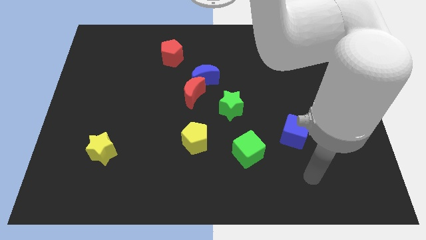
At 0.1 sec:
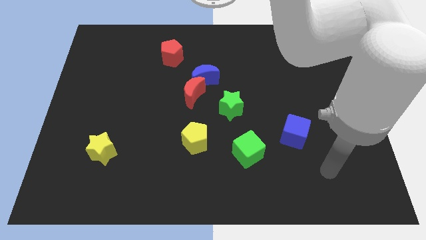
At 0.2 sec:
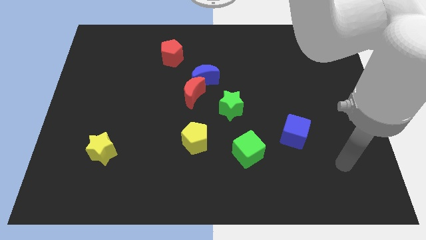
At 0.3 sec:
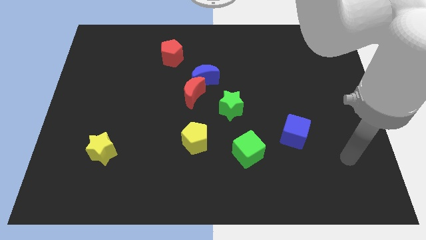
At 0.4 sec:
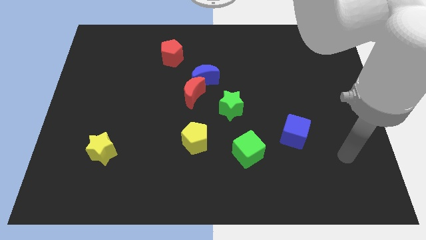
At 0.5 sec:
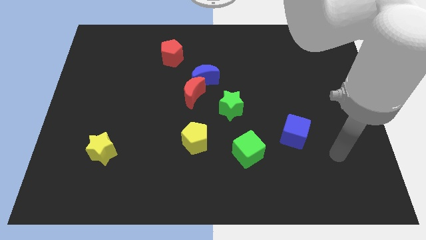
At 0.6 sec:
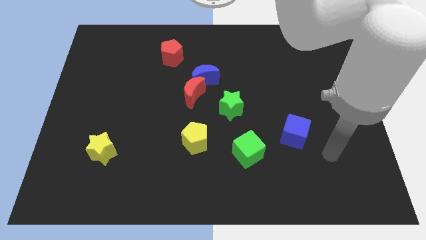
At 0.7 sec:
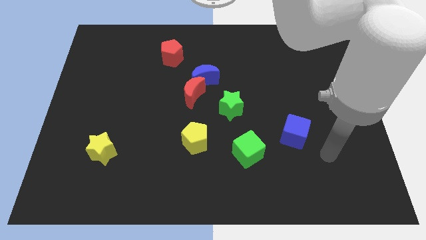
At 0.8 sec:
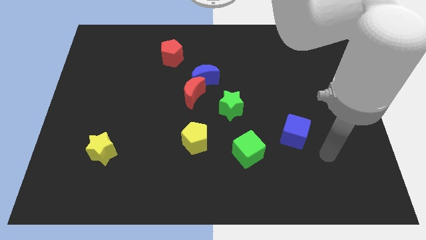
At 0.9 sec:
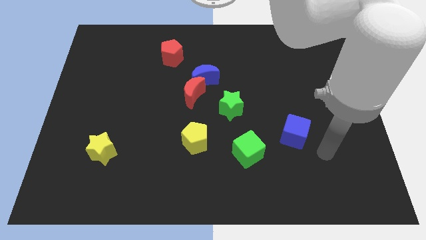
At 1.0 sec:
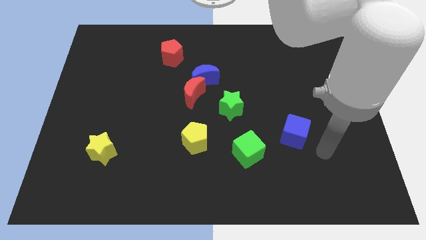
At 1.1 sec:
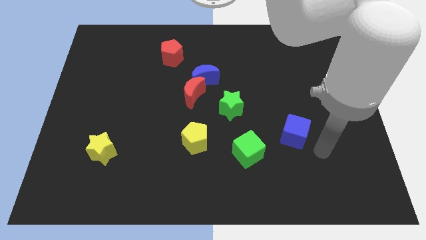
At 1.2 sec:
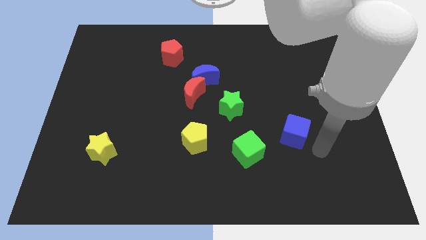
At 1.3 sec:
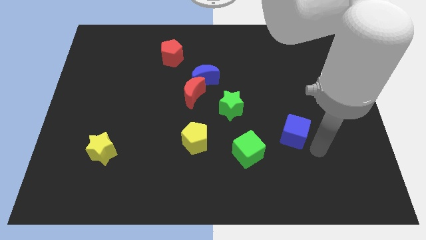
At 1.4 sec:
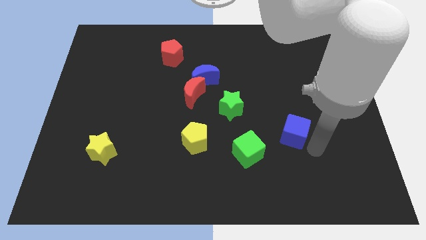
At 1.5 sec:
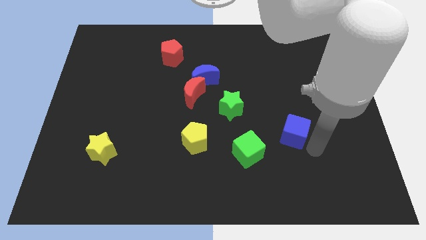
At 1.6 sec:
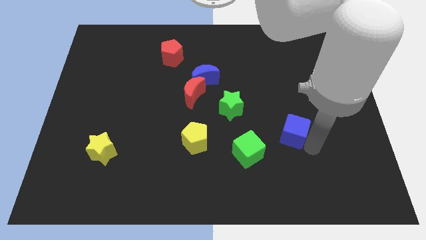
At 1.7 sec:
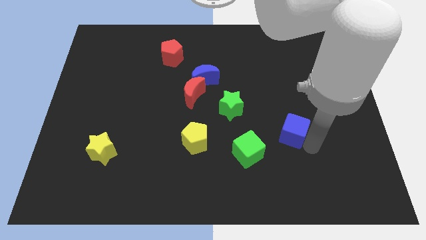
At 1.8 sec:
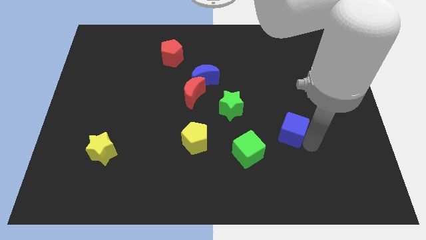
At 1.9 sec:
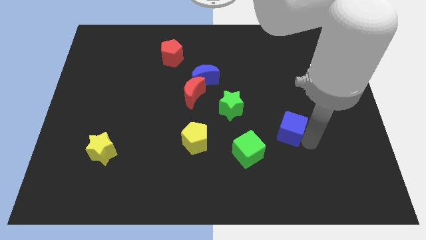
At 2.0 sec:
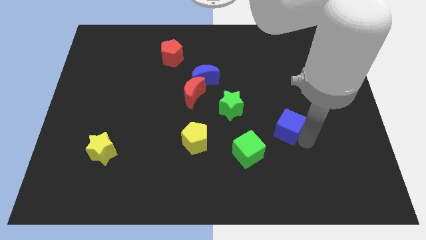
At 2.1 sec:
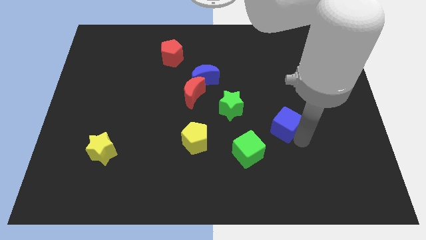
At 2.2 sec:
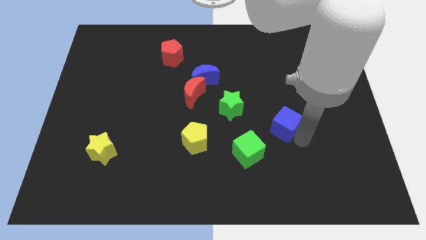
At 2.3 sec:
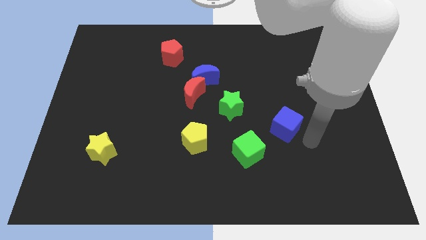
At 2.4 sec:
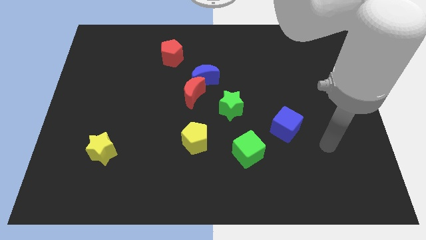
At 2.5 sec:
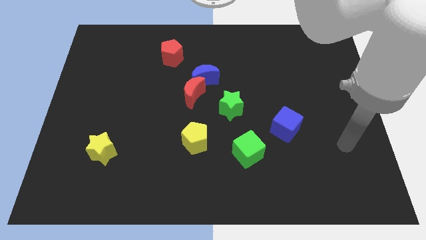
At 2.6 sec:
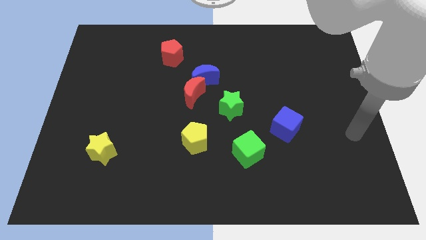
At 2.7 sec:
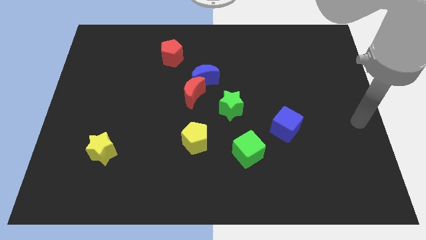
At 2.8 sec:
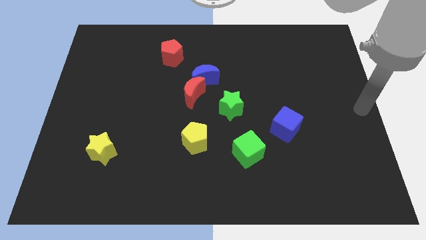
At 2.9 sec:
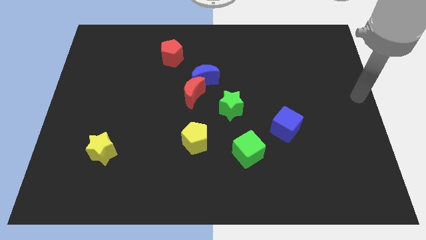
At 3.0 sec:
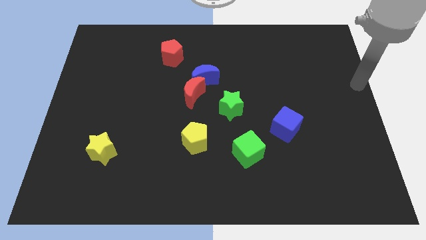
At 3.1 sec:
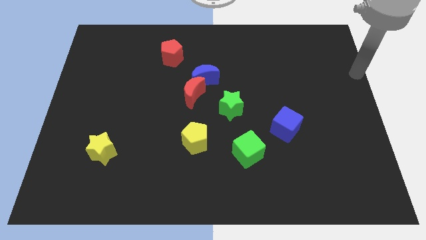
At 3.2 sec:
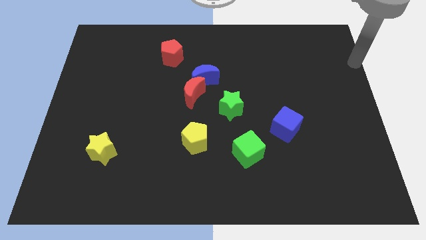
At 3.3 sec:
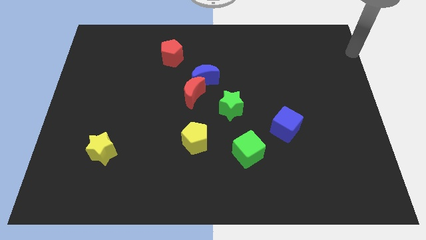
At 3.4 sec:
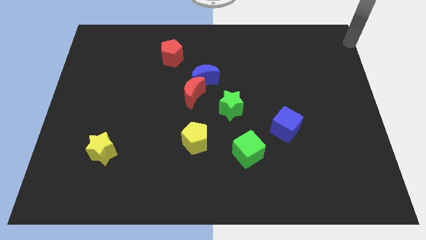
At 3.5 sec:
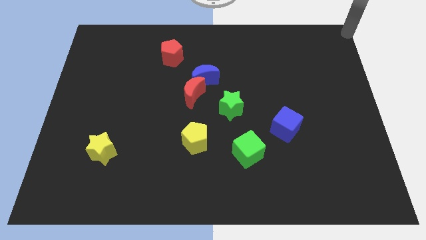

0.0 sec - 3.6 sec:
move your arm towards the top right corner of the board

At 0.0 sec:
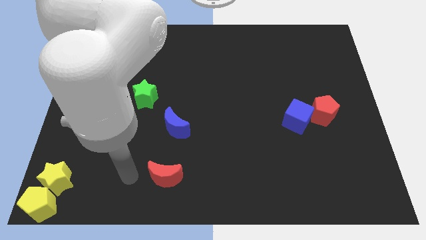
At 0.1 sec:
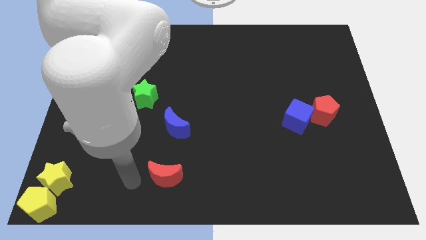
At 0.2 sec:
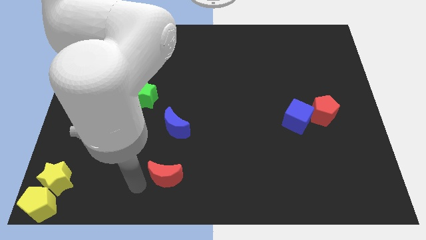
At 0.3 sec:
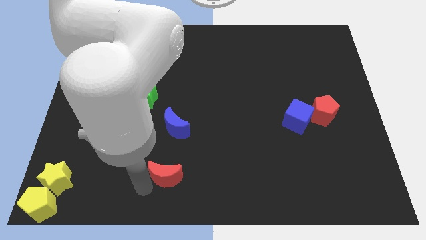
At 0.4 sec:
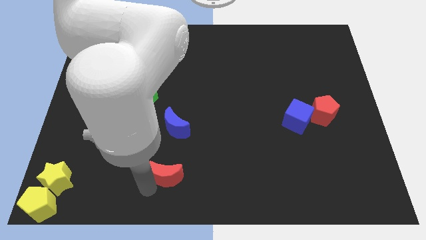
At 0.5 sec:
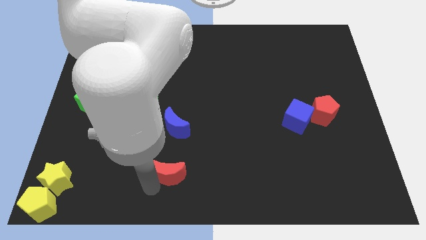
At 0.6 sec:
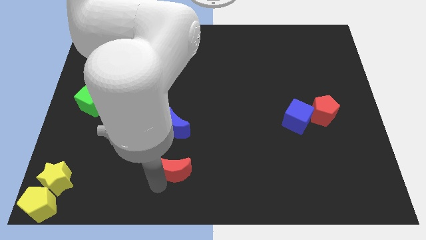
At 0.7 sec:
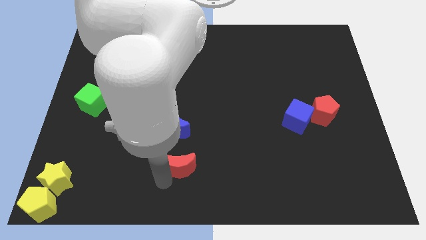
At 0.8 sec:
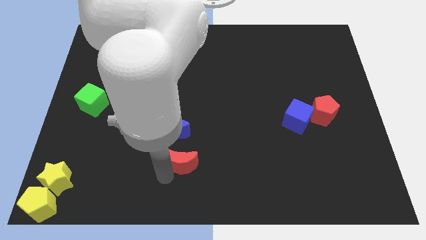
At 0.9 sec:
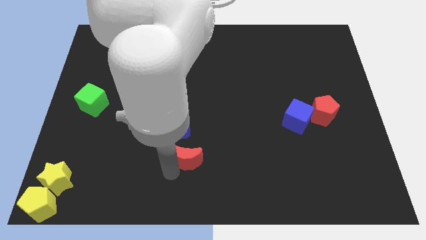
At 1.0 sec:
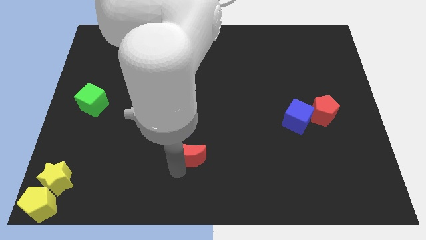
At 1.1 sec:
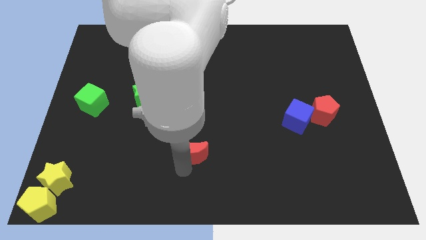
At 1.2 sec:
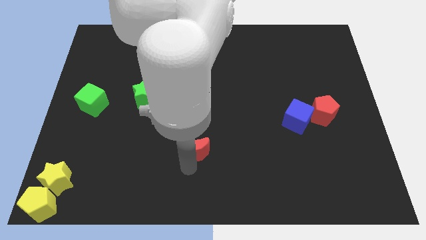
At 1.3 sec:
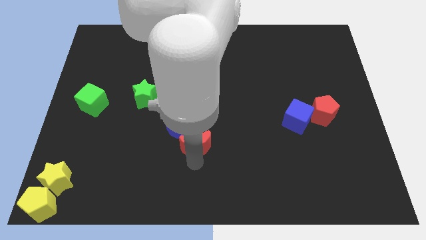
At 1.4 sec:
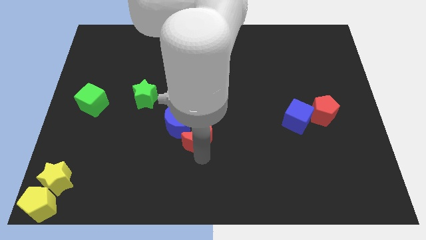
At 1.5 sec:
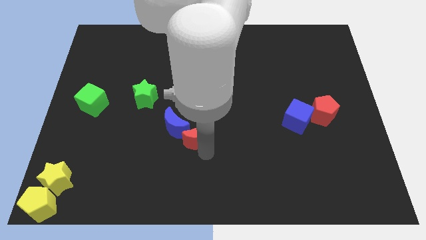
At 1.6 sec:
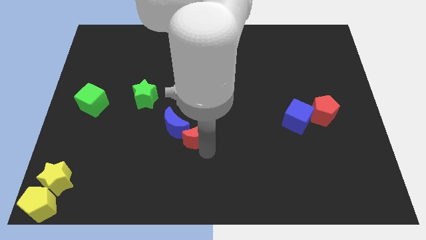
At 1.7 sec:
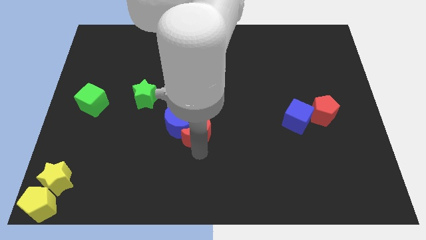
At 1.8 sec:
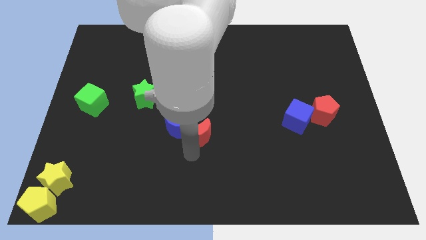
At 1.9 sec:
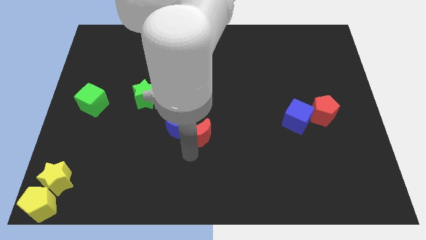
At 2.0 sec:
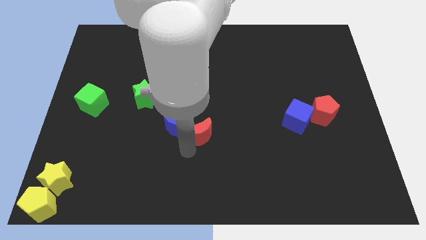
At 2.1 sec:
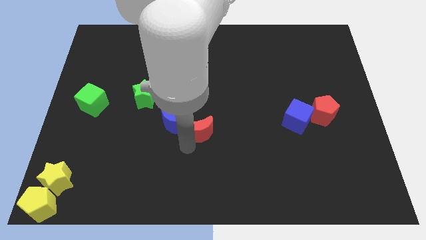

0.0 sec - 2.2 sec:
push the red moon into the blue moon

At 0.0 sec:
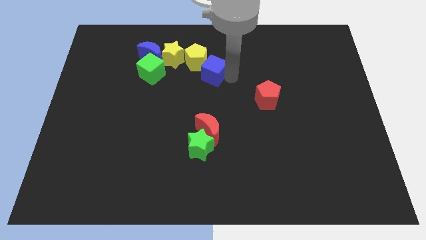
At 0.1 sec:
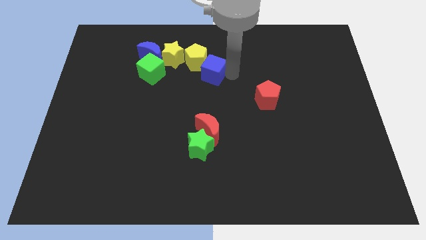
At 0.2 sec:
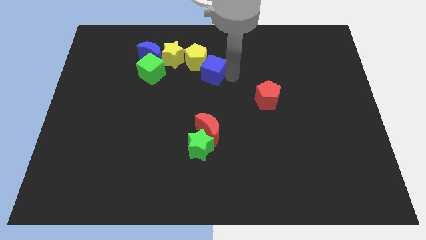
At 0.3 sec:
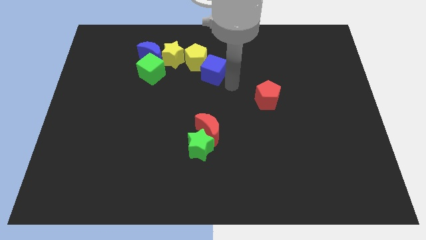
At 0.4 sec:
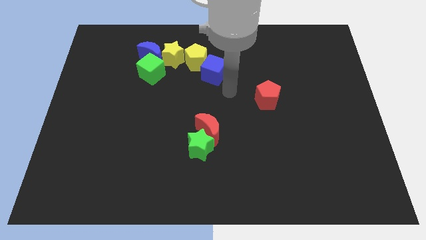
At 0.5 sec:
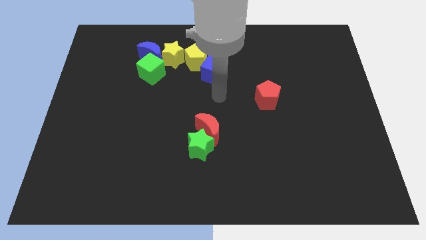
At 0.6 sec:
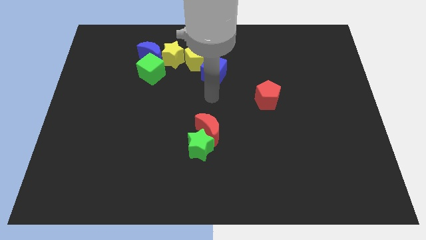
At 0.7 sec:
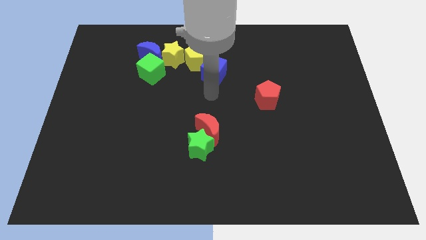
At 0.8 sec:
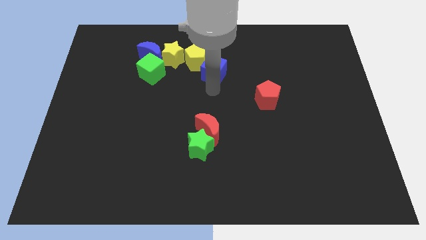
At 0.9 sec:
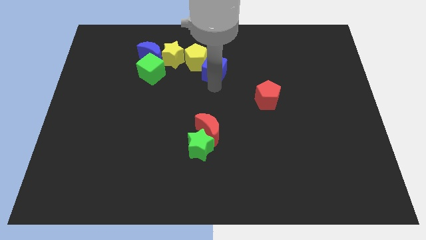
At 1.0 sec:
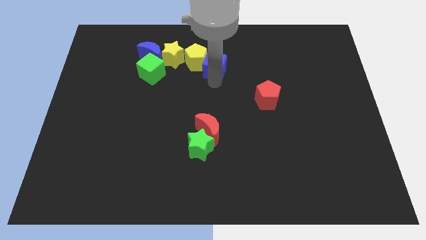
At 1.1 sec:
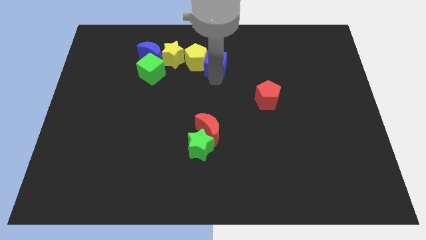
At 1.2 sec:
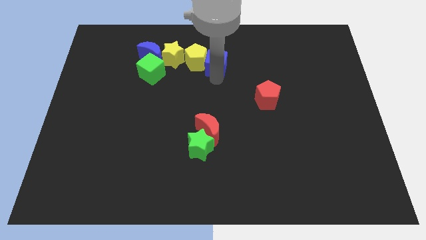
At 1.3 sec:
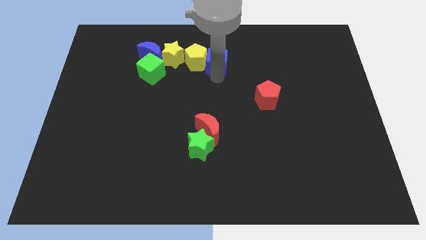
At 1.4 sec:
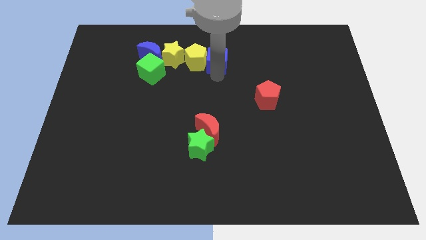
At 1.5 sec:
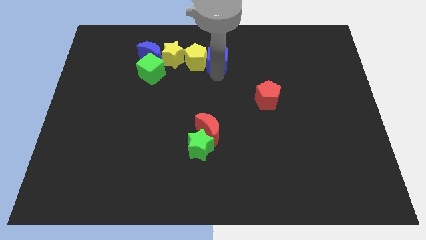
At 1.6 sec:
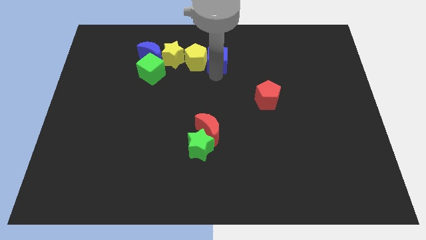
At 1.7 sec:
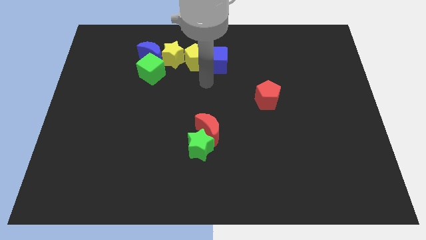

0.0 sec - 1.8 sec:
move the blue cube to the right side of the yellow pentagon

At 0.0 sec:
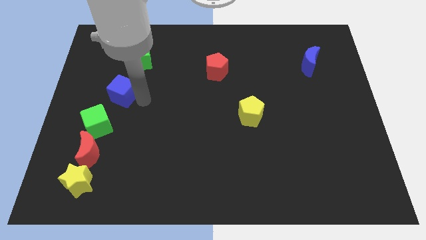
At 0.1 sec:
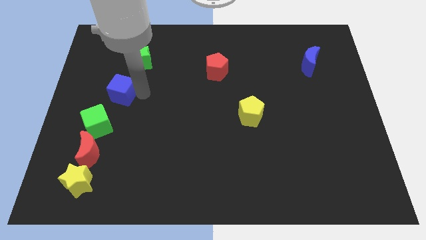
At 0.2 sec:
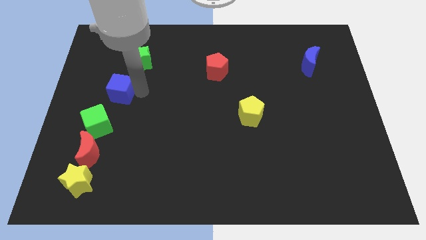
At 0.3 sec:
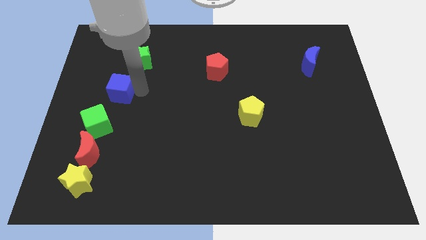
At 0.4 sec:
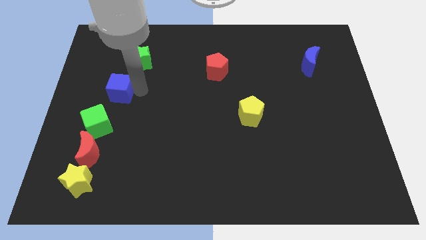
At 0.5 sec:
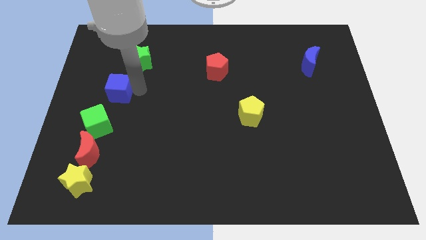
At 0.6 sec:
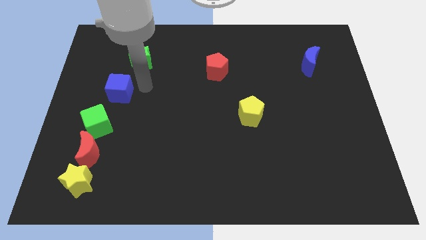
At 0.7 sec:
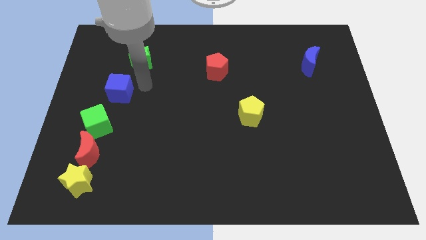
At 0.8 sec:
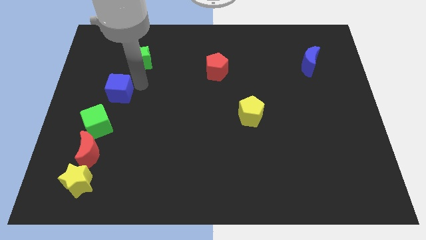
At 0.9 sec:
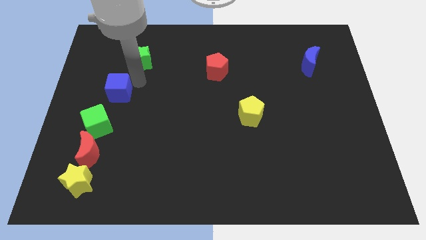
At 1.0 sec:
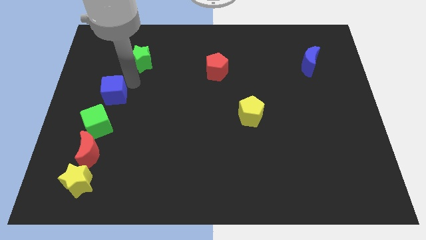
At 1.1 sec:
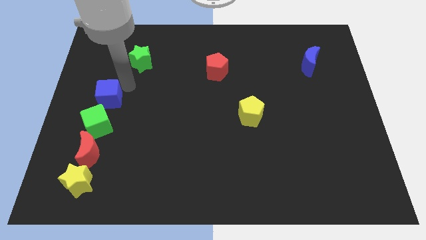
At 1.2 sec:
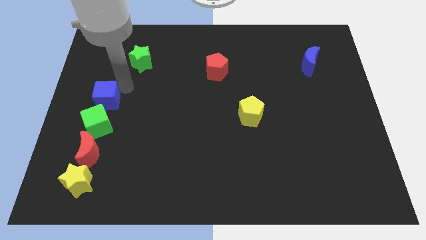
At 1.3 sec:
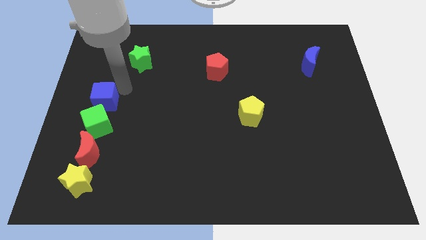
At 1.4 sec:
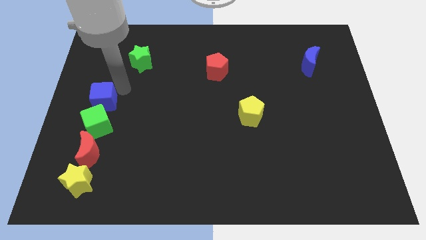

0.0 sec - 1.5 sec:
place the blue cube on green cube
